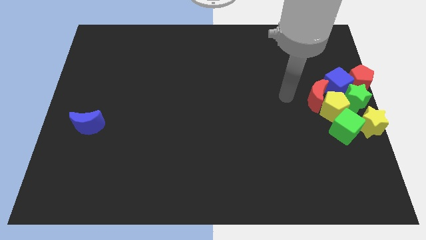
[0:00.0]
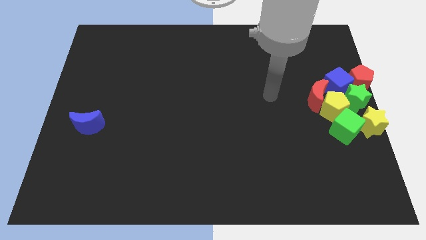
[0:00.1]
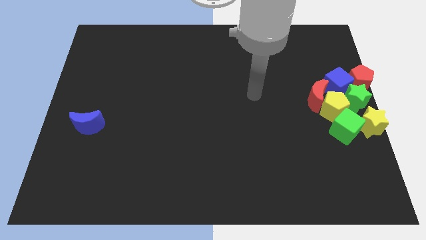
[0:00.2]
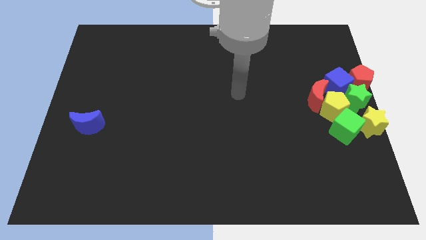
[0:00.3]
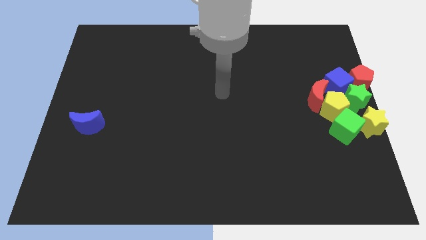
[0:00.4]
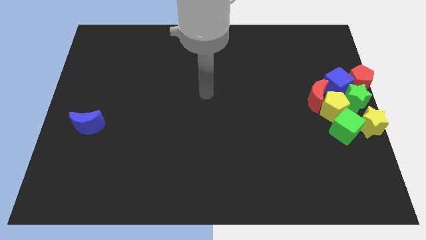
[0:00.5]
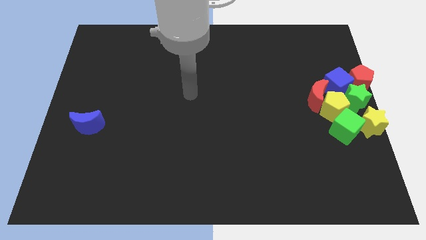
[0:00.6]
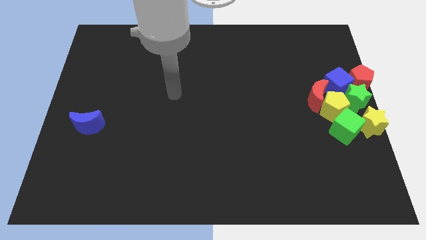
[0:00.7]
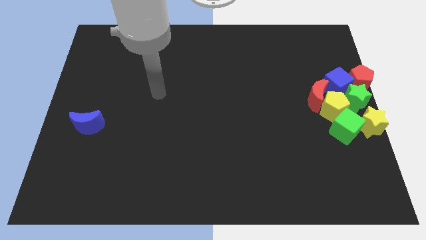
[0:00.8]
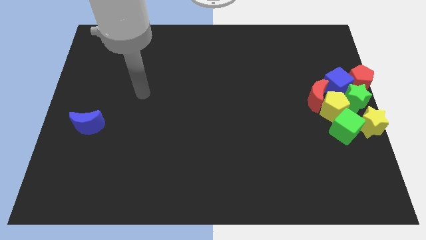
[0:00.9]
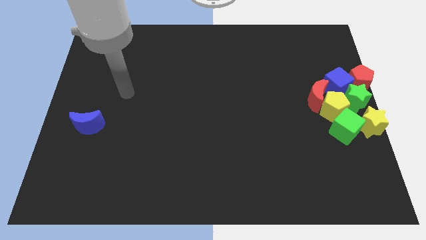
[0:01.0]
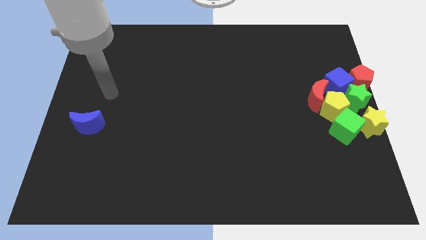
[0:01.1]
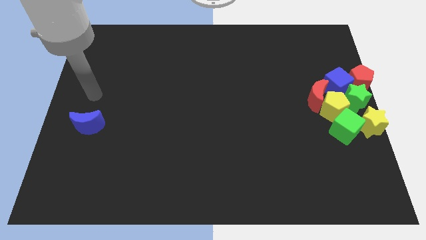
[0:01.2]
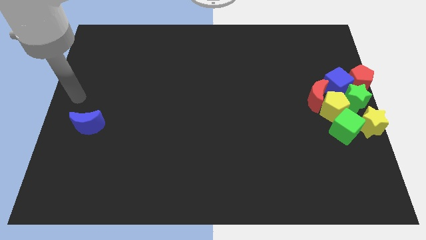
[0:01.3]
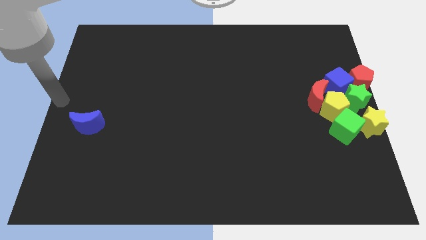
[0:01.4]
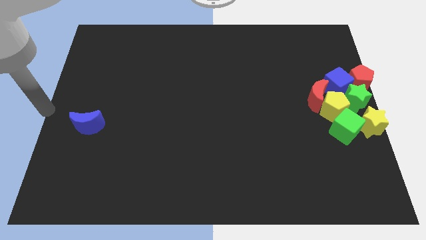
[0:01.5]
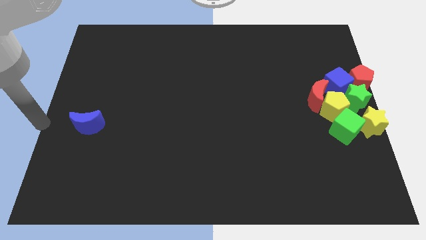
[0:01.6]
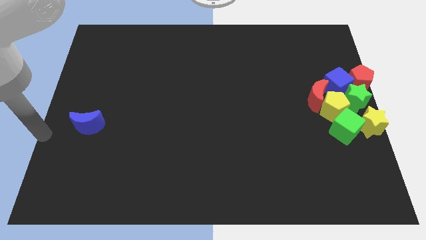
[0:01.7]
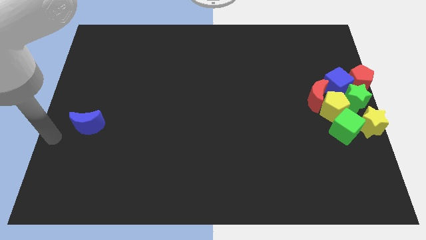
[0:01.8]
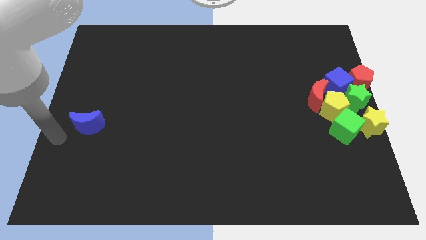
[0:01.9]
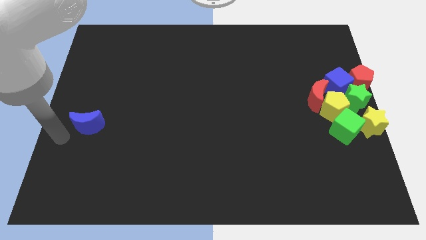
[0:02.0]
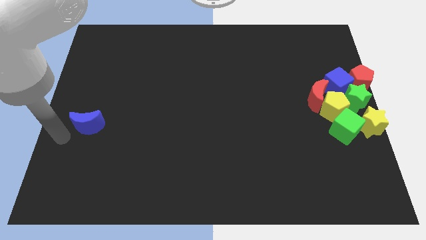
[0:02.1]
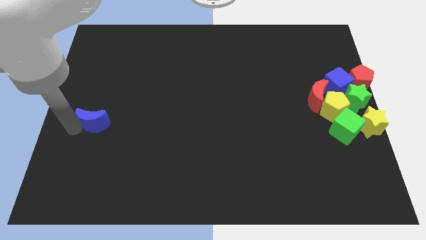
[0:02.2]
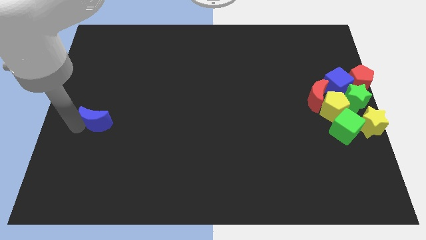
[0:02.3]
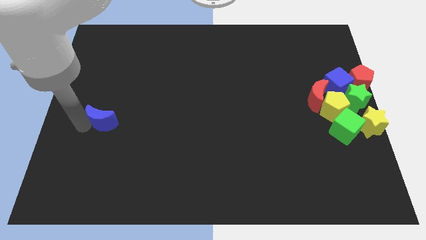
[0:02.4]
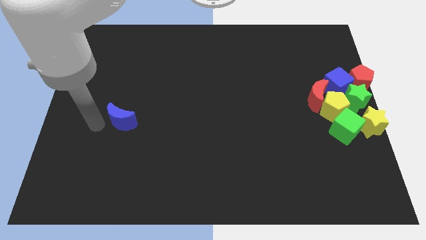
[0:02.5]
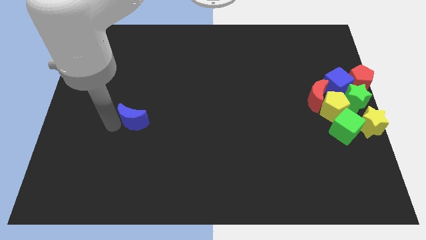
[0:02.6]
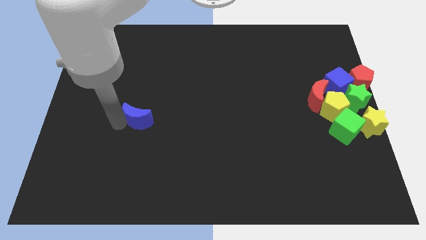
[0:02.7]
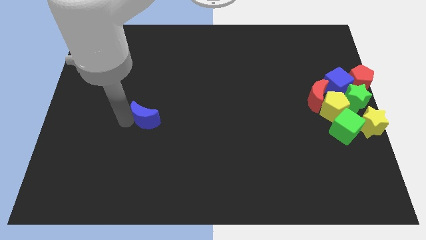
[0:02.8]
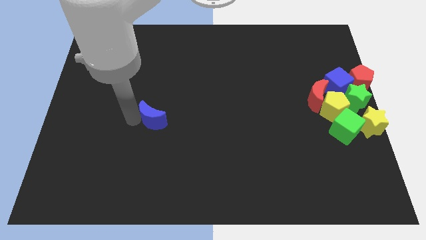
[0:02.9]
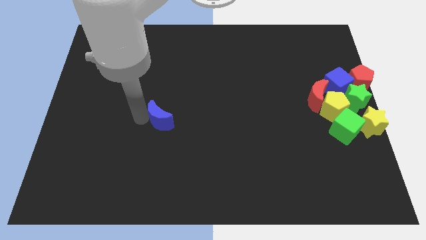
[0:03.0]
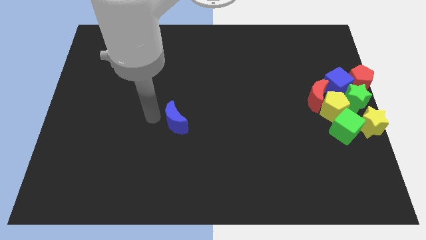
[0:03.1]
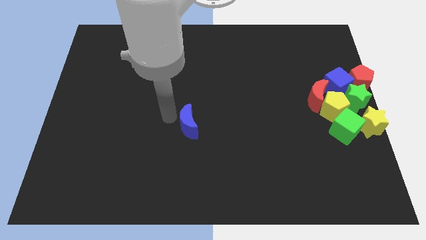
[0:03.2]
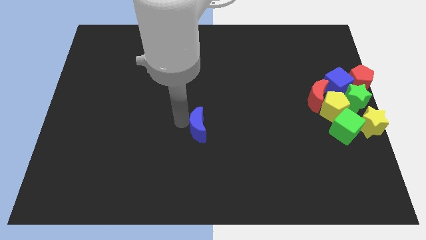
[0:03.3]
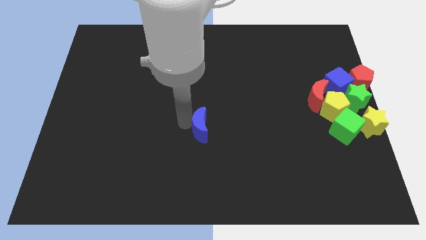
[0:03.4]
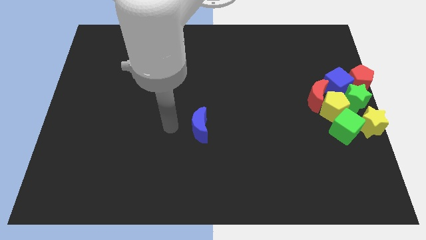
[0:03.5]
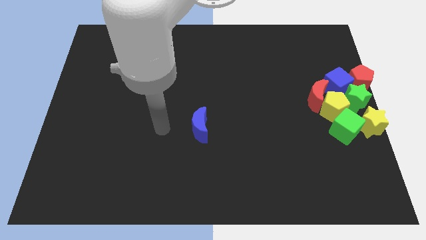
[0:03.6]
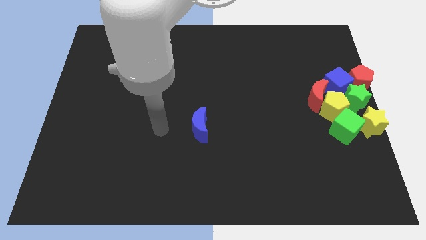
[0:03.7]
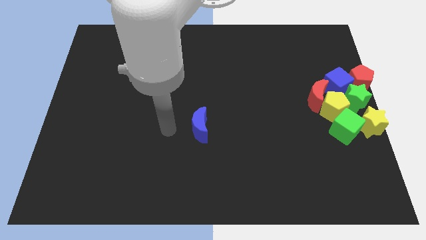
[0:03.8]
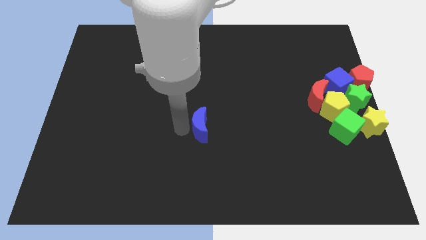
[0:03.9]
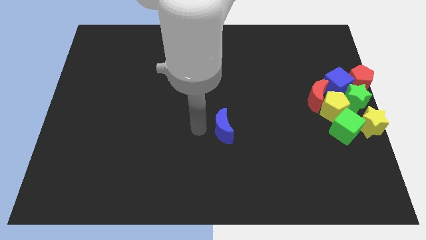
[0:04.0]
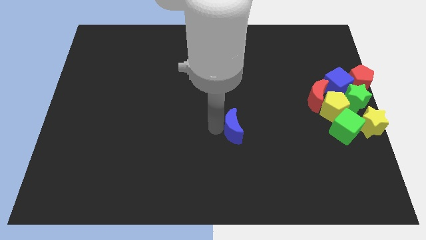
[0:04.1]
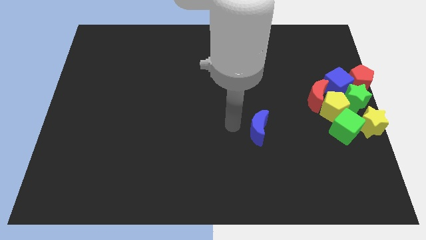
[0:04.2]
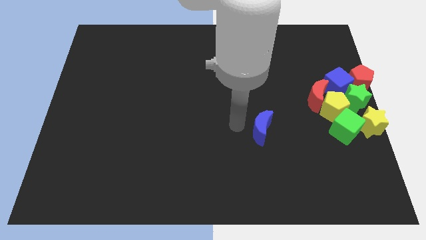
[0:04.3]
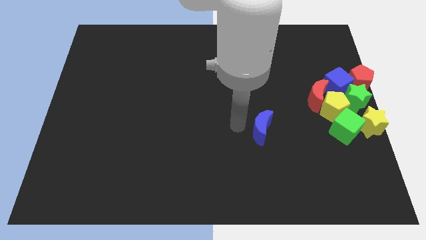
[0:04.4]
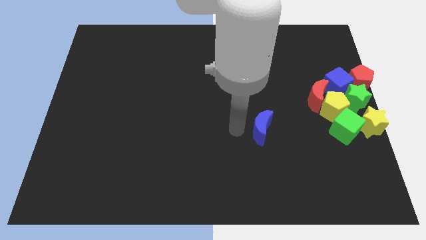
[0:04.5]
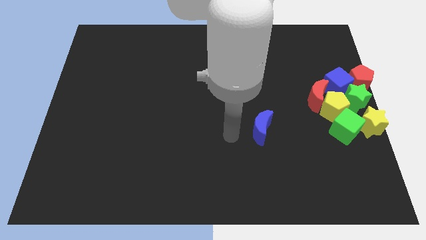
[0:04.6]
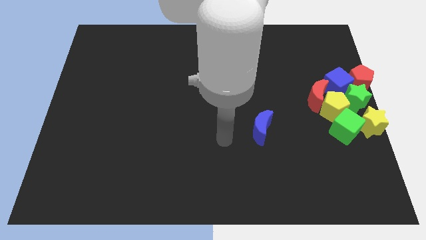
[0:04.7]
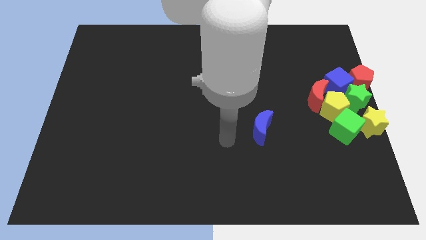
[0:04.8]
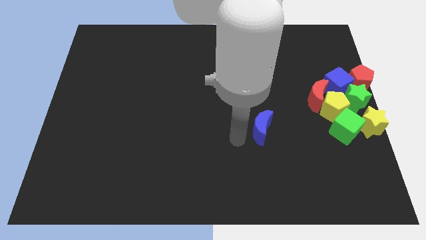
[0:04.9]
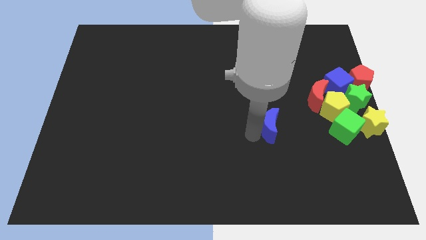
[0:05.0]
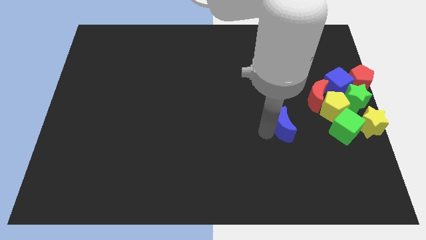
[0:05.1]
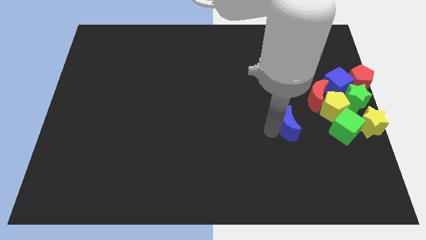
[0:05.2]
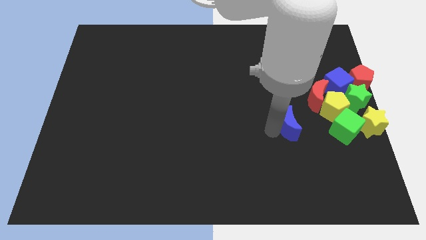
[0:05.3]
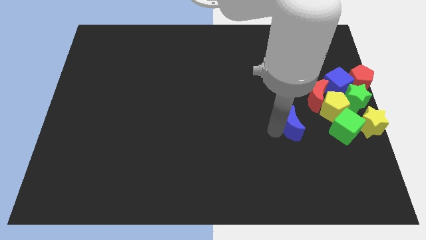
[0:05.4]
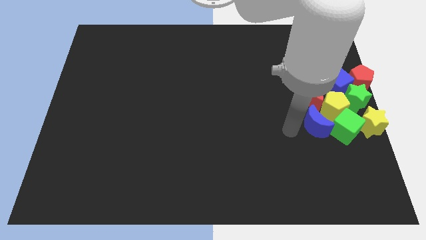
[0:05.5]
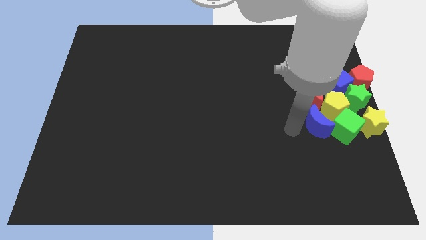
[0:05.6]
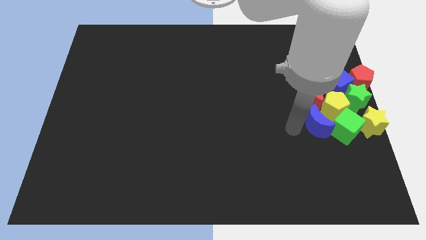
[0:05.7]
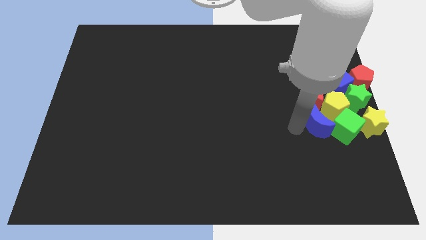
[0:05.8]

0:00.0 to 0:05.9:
push the blue crescent to the right center of the board

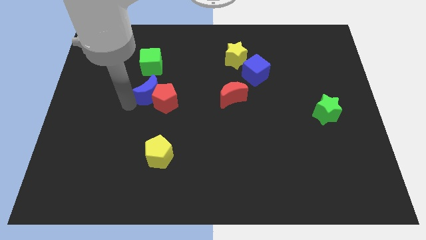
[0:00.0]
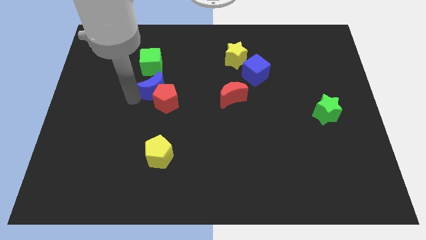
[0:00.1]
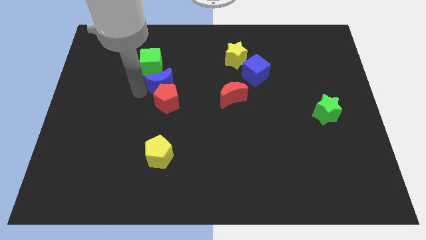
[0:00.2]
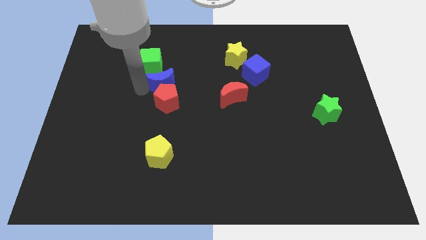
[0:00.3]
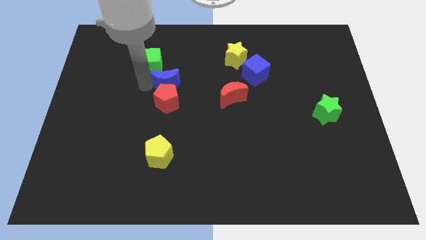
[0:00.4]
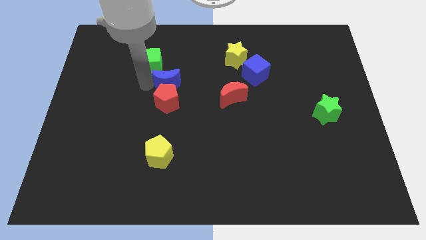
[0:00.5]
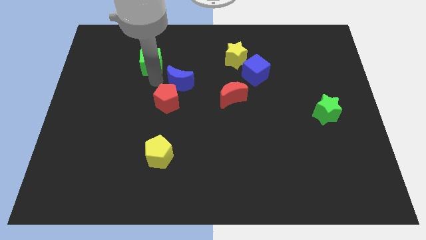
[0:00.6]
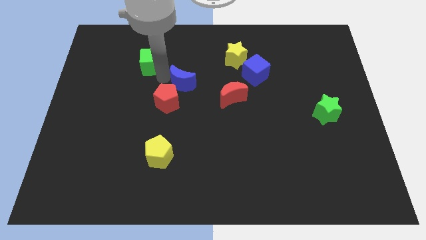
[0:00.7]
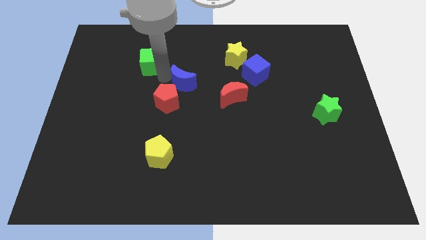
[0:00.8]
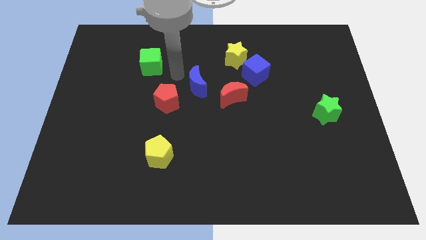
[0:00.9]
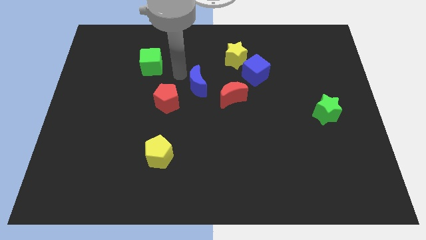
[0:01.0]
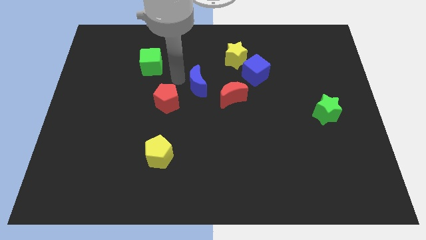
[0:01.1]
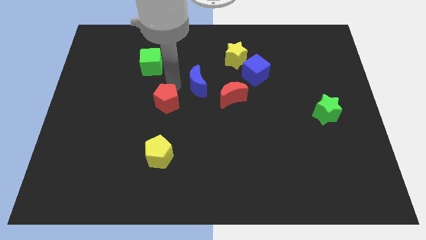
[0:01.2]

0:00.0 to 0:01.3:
move blue moon left above the red moon

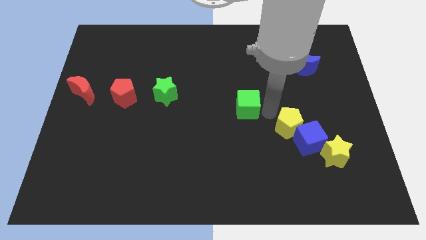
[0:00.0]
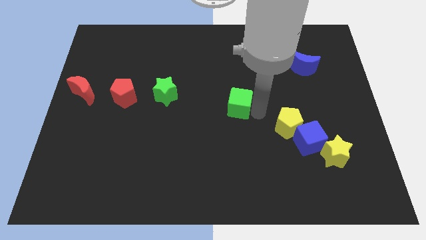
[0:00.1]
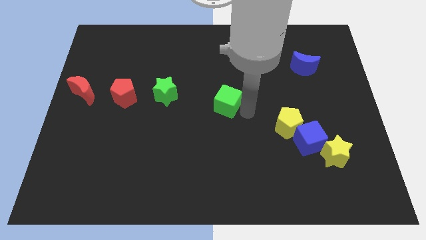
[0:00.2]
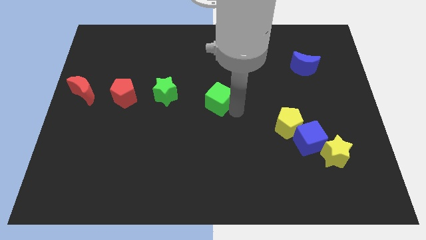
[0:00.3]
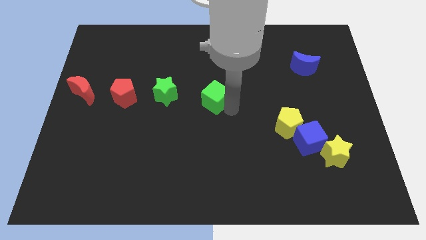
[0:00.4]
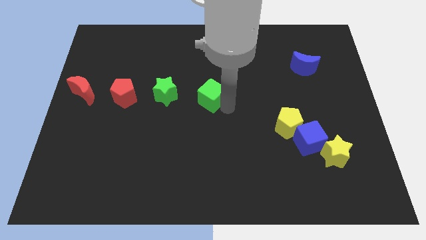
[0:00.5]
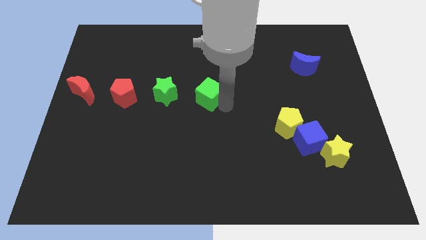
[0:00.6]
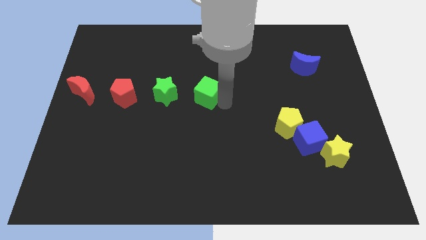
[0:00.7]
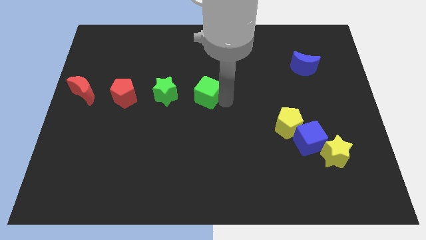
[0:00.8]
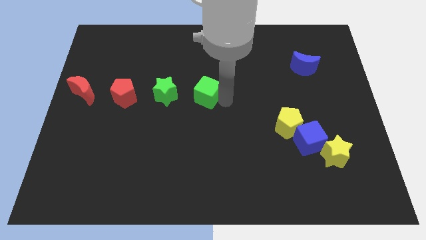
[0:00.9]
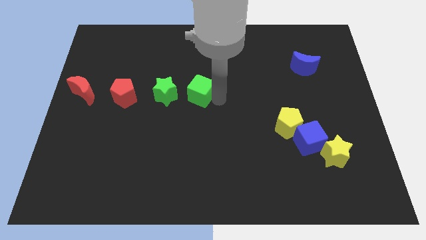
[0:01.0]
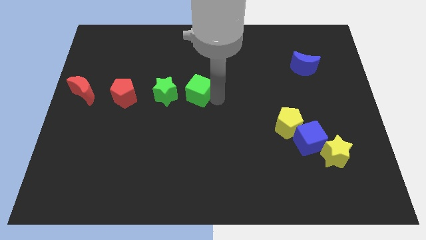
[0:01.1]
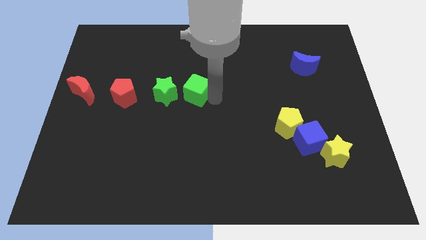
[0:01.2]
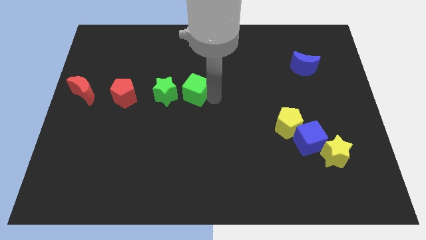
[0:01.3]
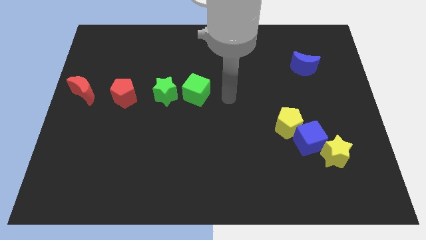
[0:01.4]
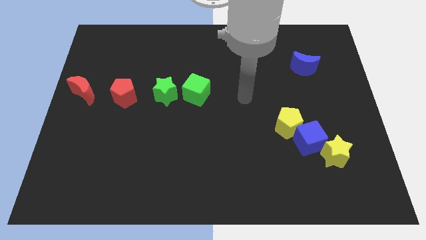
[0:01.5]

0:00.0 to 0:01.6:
place the green cube to the right of green star

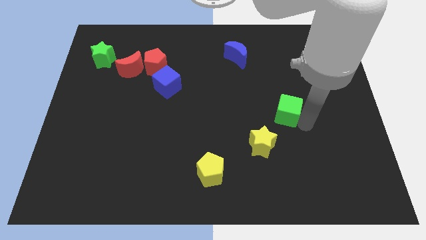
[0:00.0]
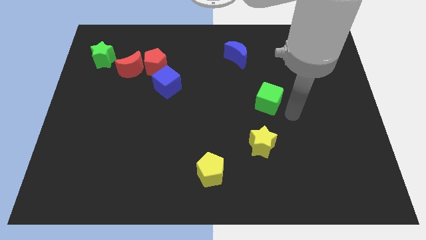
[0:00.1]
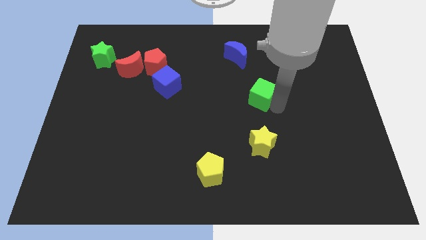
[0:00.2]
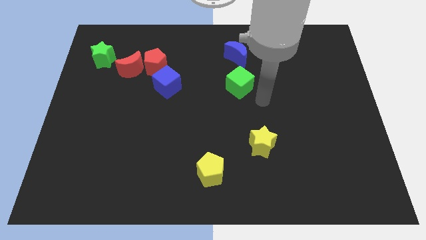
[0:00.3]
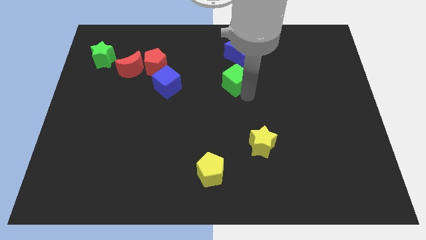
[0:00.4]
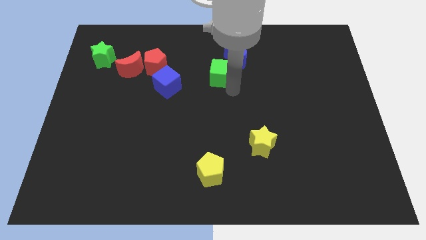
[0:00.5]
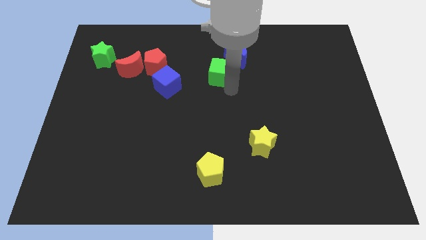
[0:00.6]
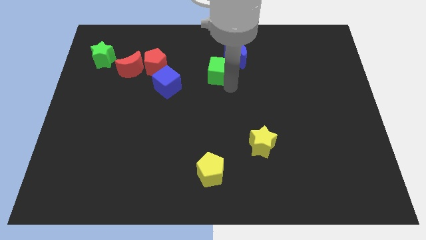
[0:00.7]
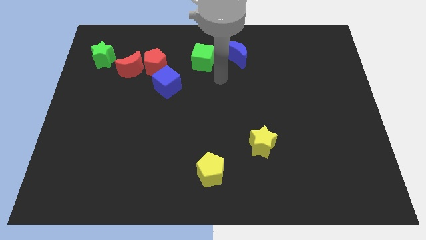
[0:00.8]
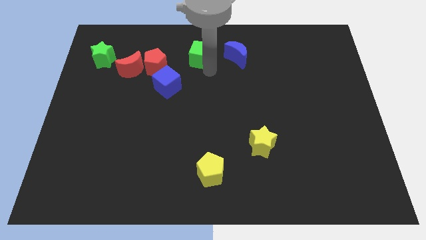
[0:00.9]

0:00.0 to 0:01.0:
move the green cube left to the blue moon
